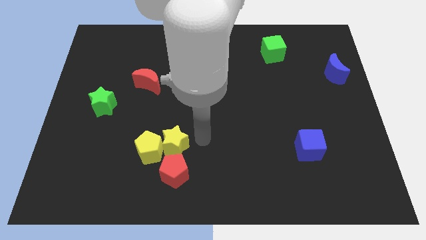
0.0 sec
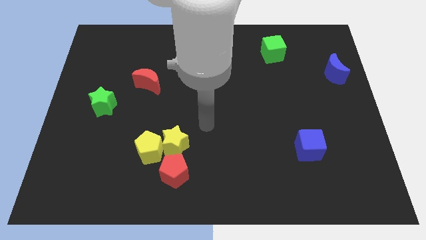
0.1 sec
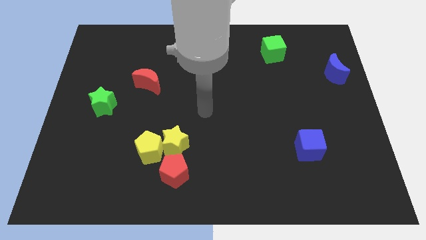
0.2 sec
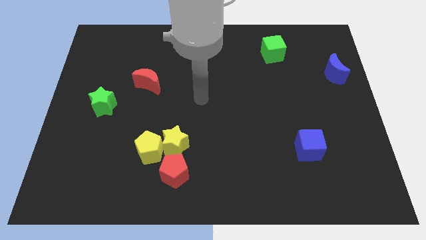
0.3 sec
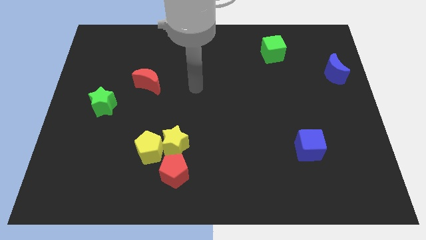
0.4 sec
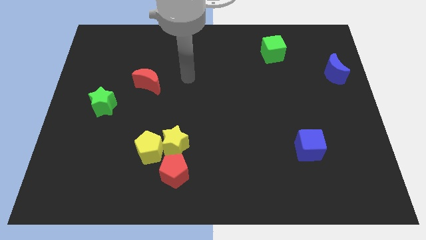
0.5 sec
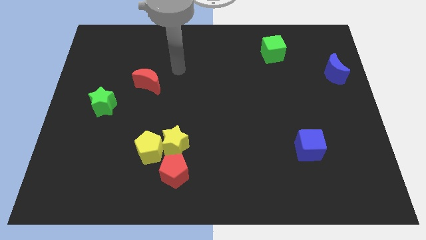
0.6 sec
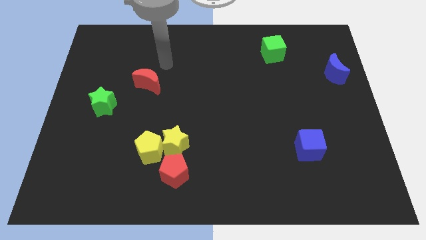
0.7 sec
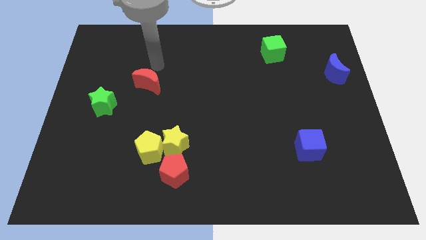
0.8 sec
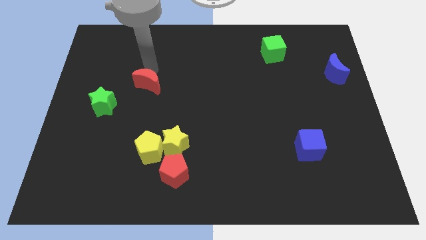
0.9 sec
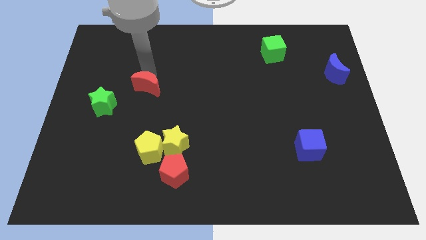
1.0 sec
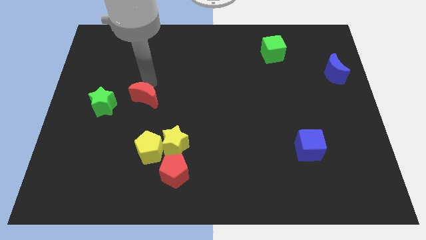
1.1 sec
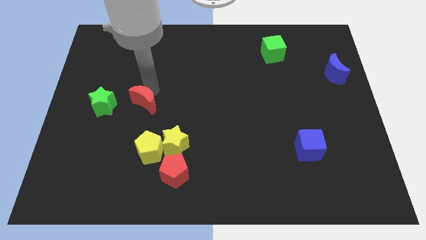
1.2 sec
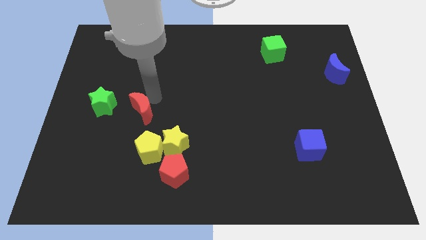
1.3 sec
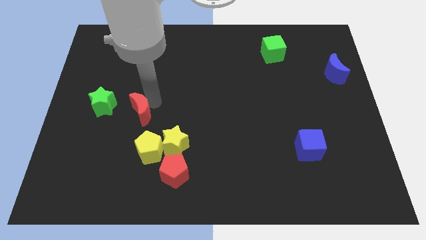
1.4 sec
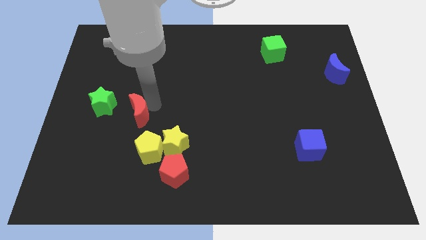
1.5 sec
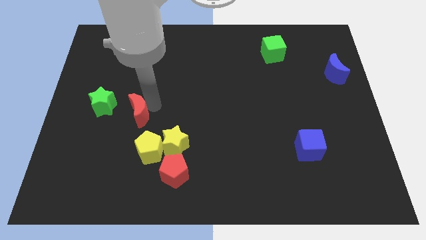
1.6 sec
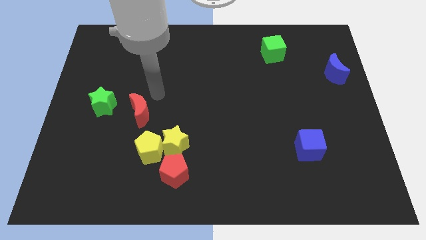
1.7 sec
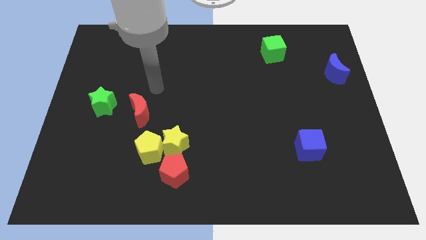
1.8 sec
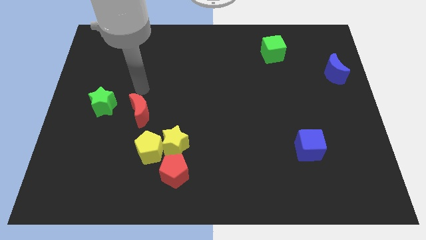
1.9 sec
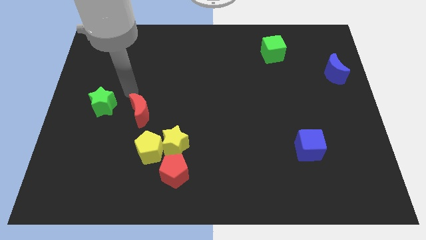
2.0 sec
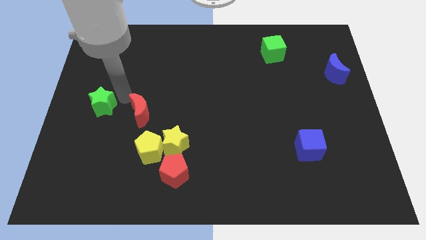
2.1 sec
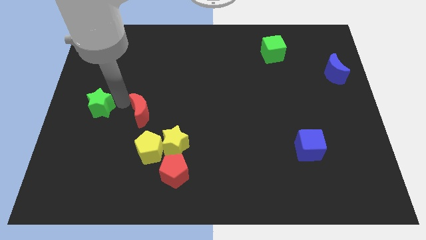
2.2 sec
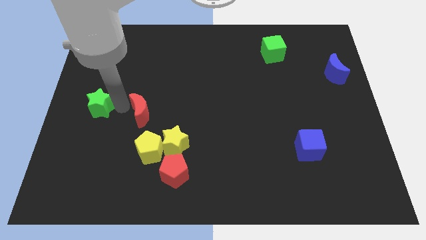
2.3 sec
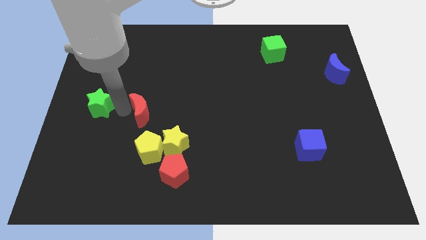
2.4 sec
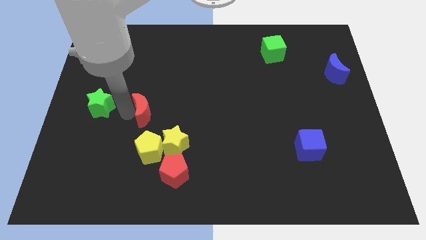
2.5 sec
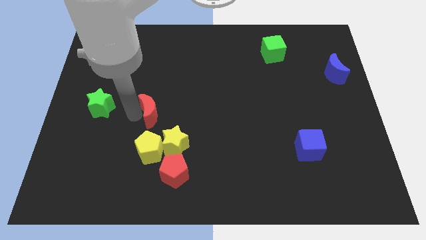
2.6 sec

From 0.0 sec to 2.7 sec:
place the red moon at the top of yellow pentagon

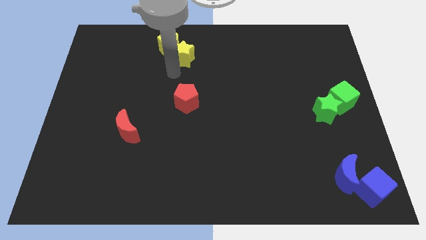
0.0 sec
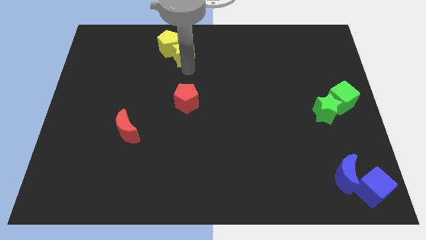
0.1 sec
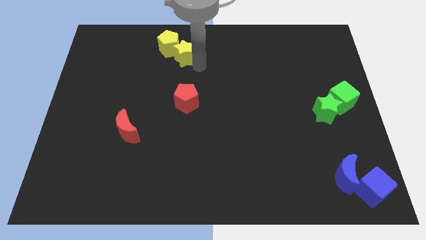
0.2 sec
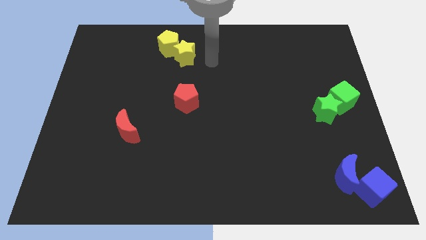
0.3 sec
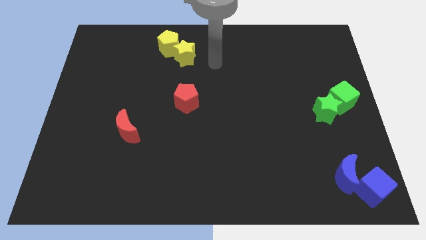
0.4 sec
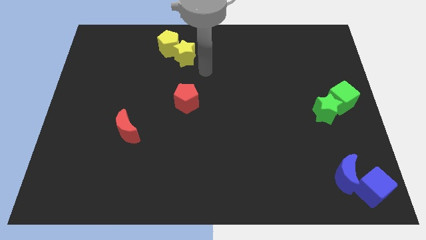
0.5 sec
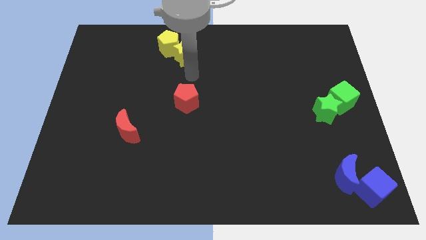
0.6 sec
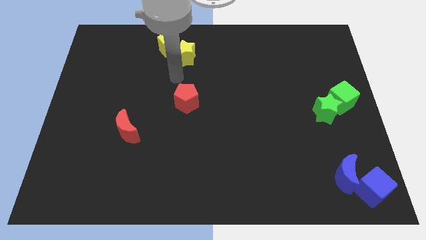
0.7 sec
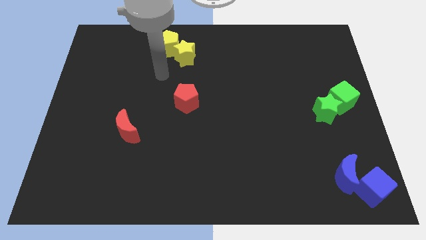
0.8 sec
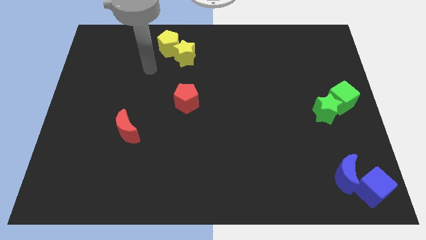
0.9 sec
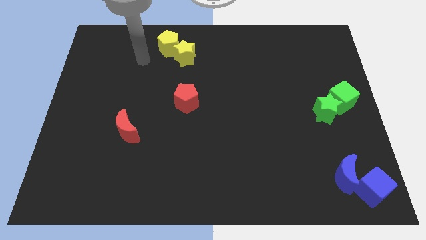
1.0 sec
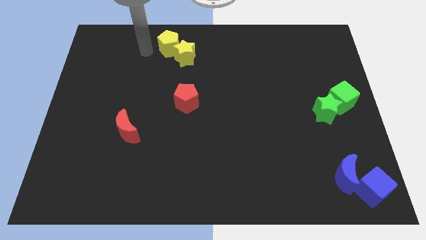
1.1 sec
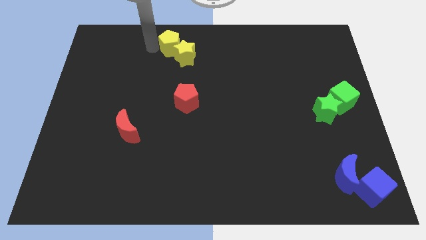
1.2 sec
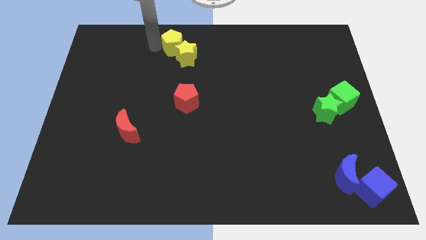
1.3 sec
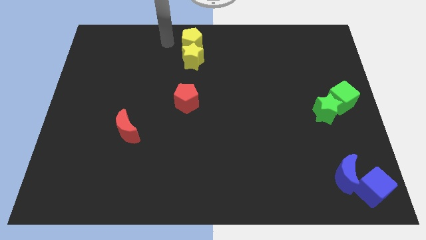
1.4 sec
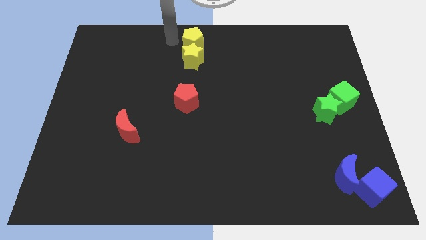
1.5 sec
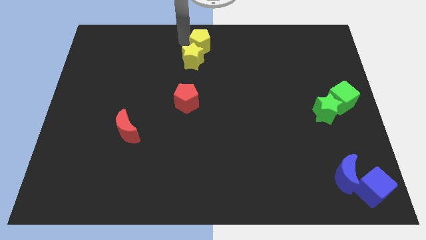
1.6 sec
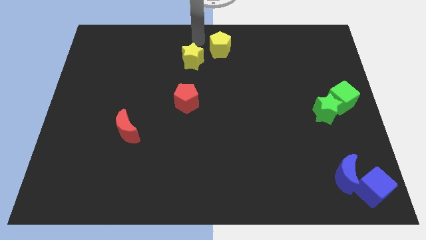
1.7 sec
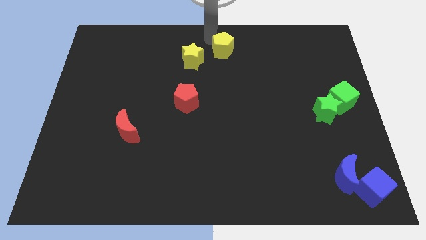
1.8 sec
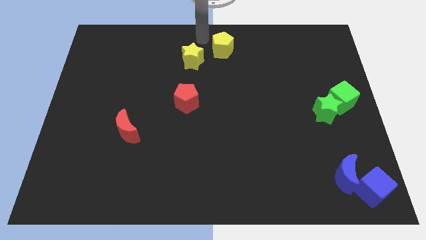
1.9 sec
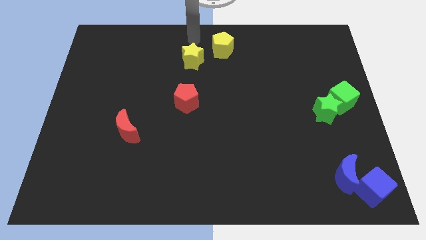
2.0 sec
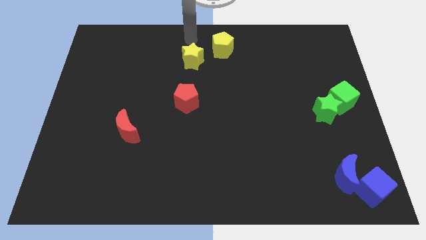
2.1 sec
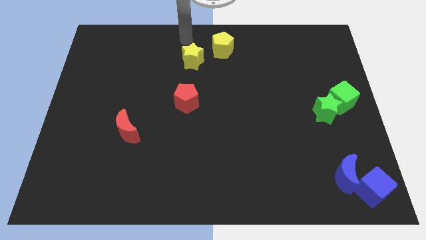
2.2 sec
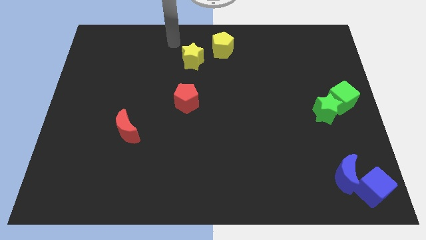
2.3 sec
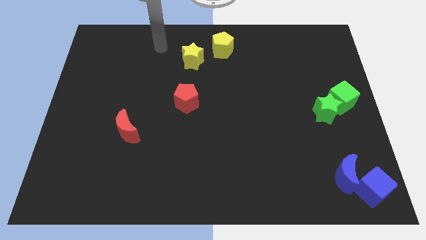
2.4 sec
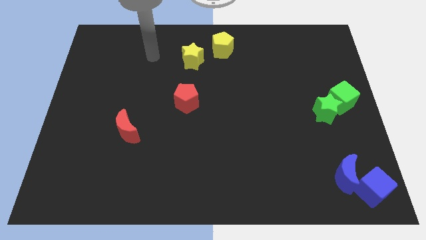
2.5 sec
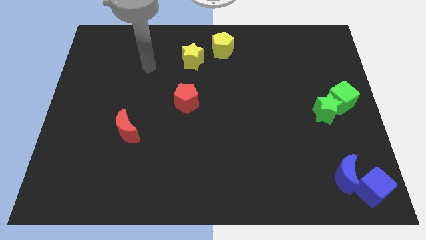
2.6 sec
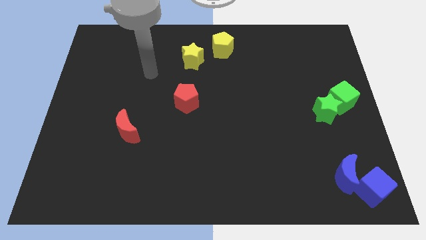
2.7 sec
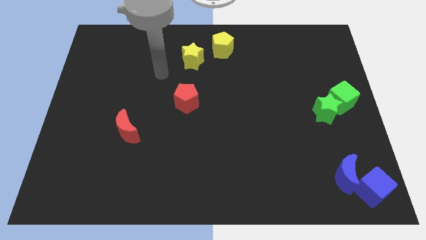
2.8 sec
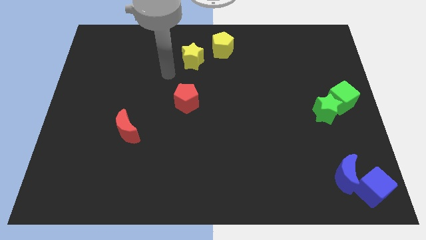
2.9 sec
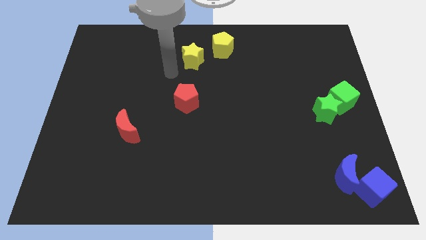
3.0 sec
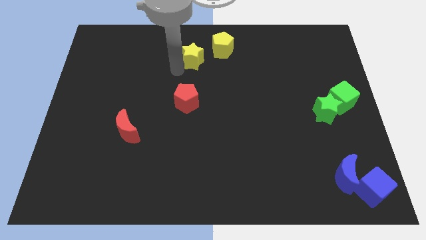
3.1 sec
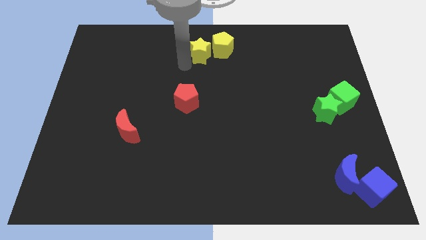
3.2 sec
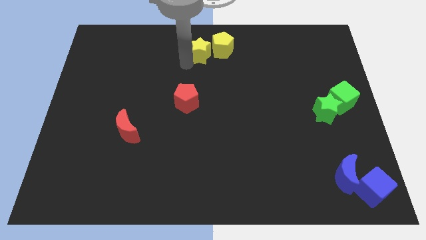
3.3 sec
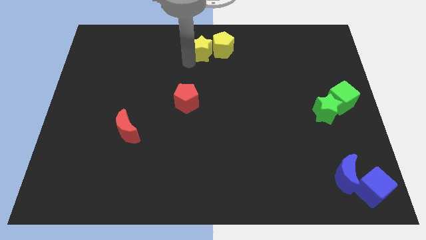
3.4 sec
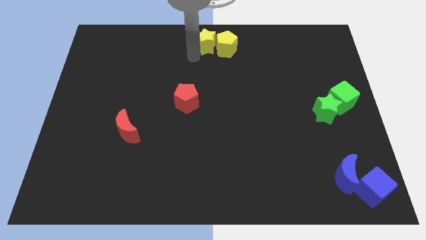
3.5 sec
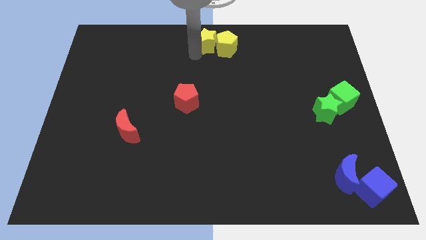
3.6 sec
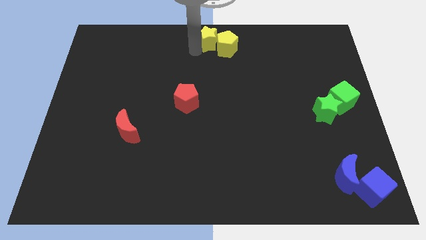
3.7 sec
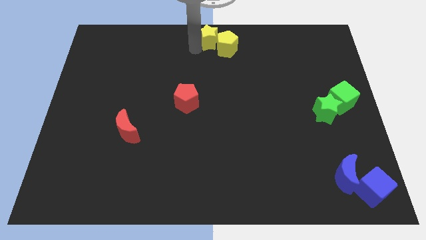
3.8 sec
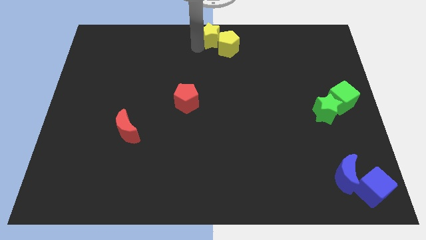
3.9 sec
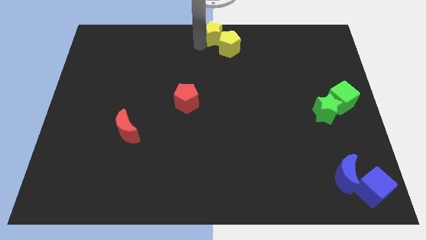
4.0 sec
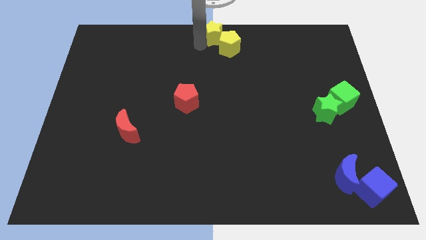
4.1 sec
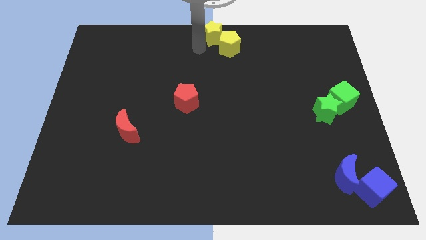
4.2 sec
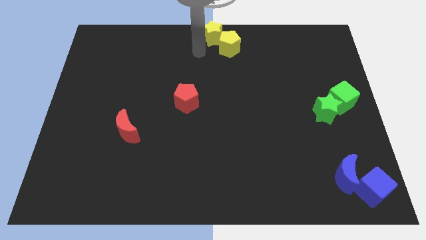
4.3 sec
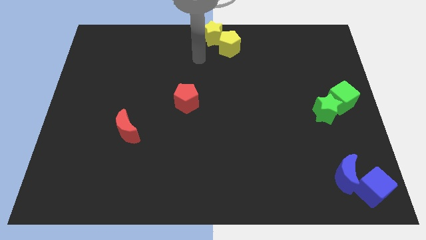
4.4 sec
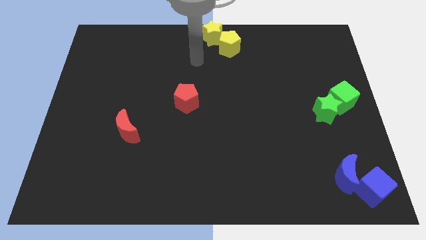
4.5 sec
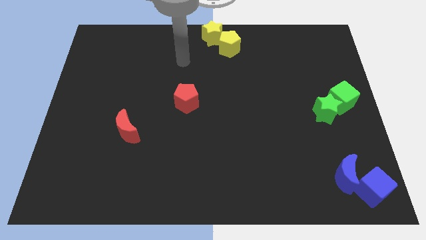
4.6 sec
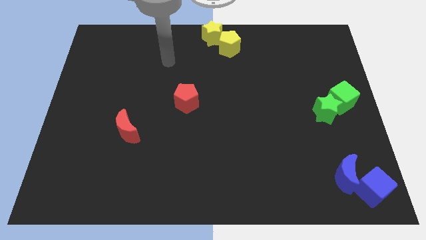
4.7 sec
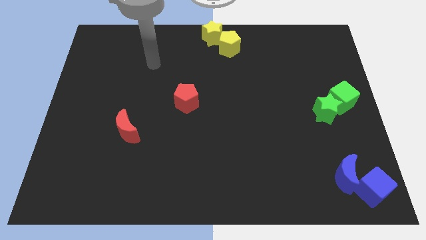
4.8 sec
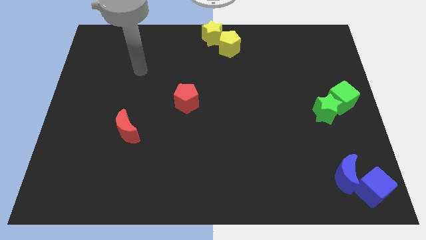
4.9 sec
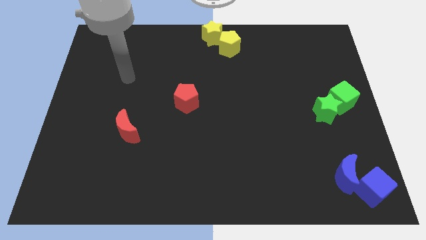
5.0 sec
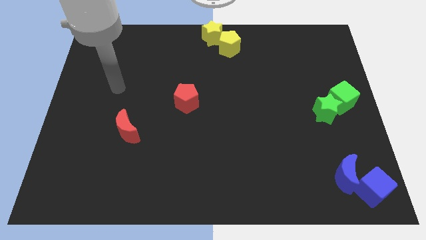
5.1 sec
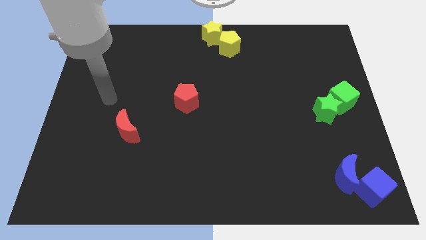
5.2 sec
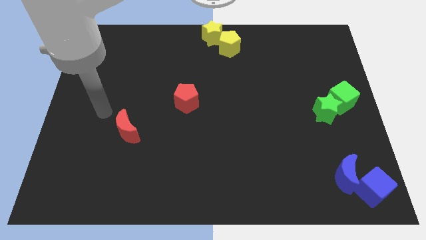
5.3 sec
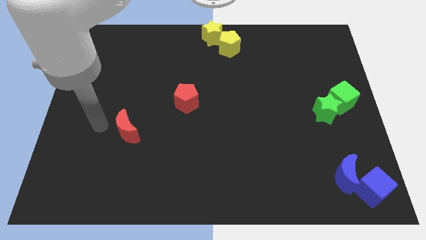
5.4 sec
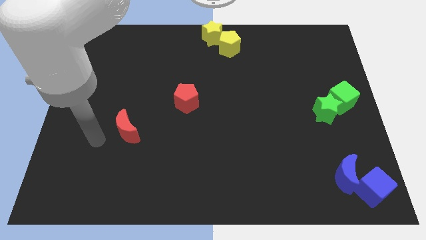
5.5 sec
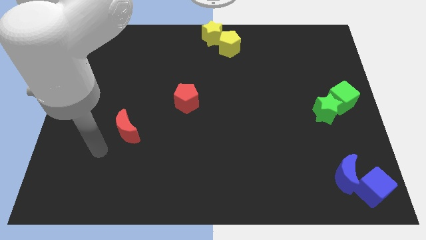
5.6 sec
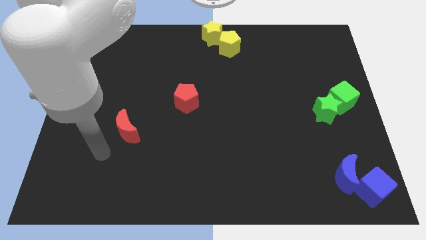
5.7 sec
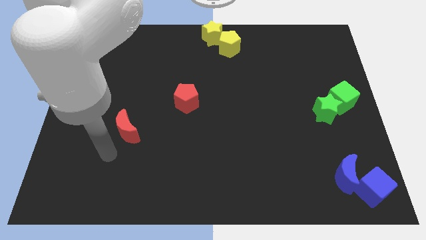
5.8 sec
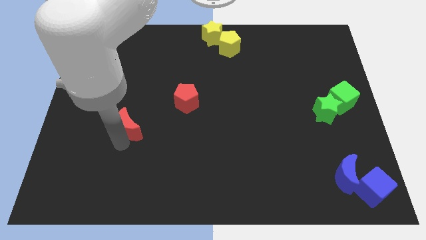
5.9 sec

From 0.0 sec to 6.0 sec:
place a yellow star and pentagon into the top center of the board

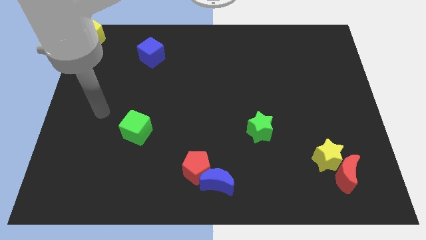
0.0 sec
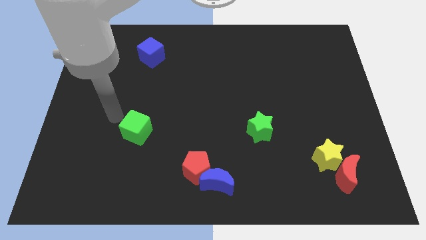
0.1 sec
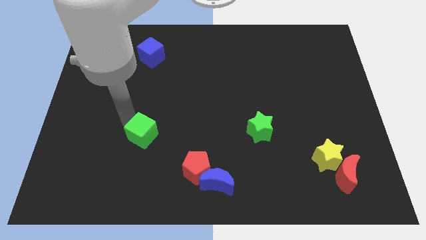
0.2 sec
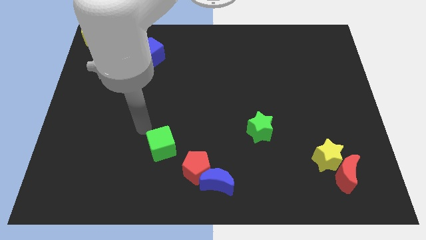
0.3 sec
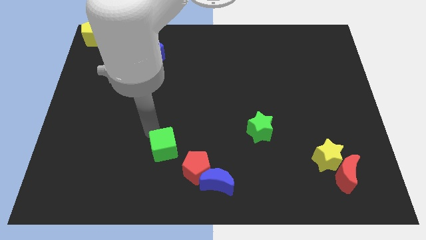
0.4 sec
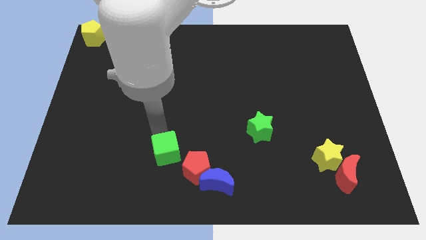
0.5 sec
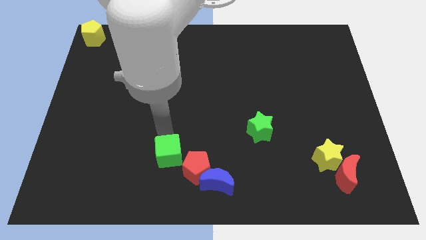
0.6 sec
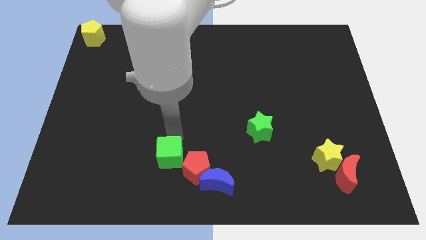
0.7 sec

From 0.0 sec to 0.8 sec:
push the green cube towards the red pentagon
